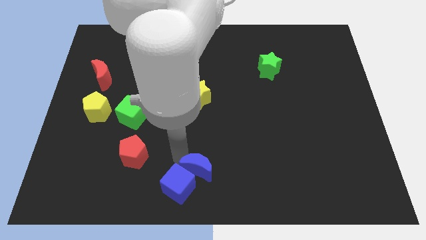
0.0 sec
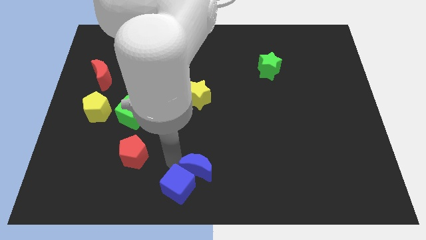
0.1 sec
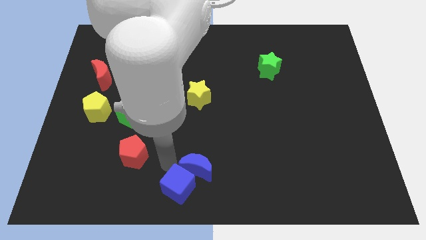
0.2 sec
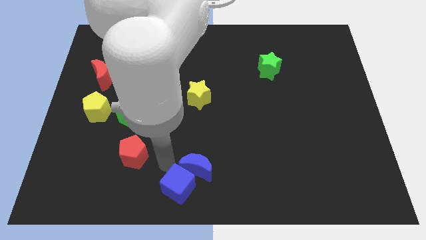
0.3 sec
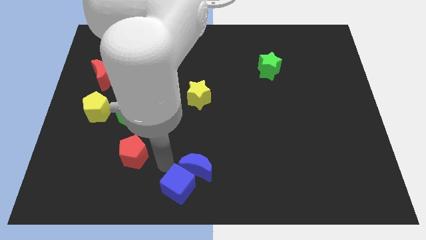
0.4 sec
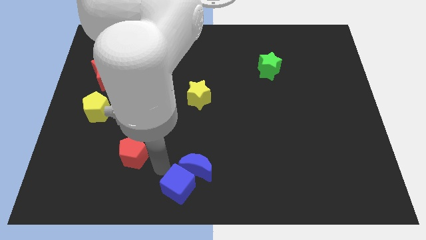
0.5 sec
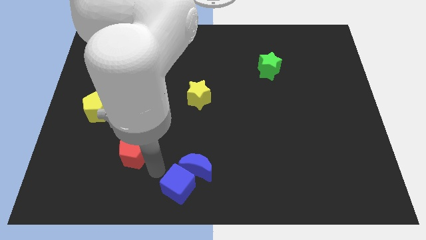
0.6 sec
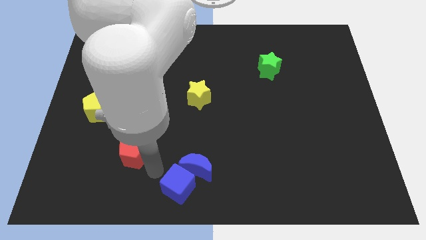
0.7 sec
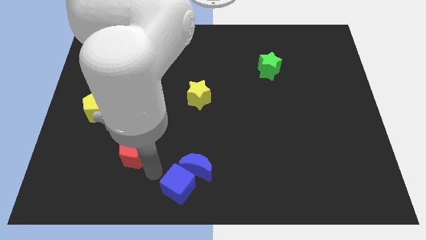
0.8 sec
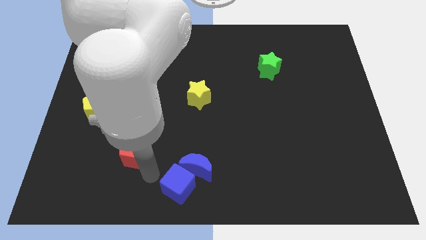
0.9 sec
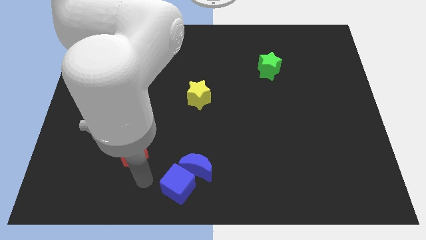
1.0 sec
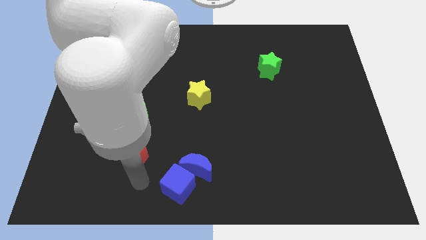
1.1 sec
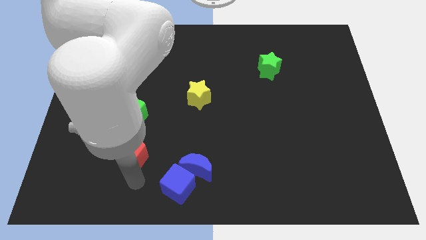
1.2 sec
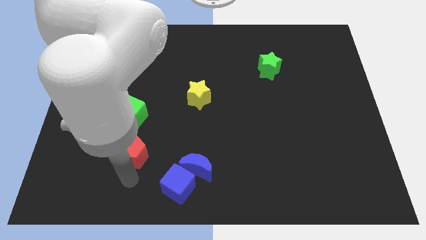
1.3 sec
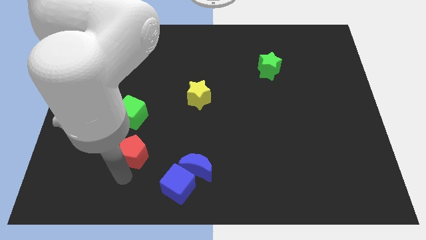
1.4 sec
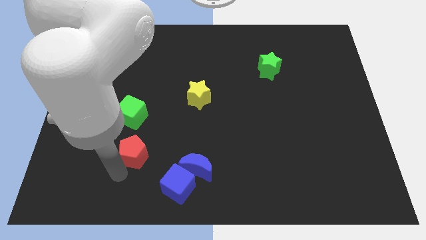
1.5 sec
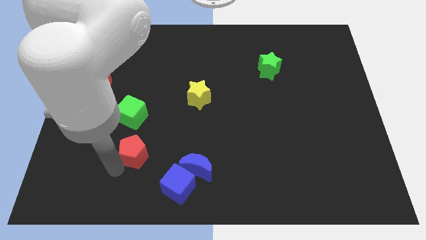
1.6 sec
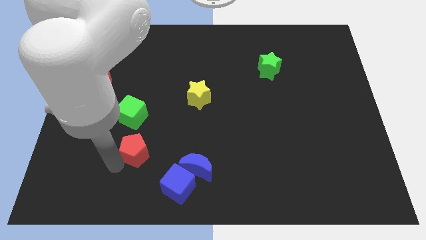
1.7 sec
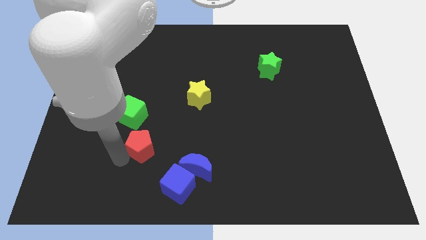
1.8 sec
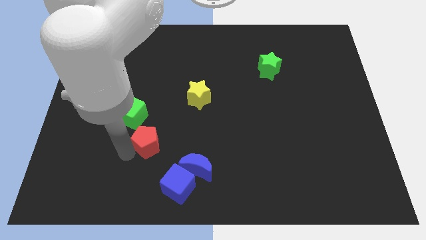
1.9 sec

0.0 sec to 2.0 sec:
move your arm away from the blue moon

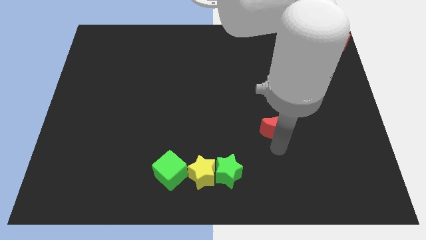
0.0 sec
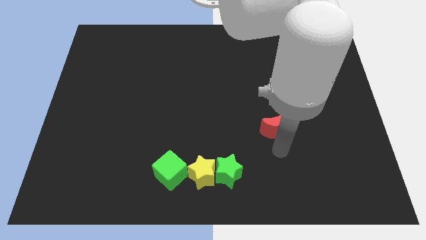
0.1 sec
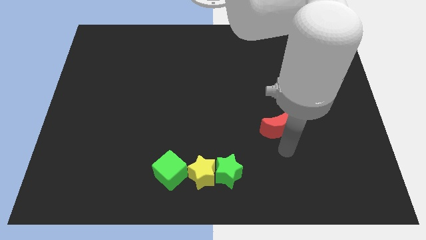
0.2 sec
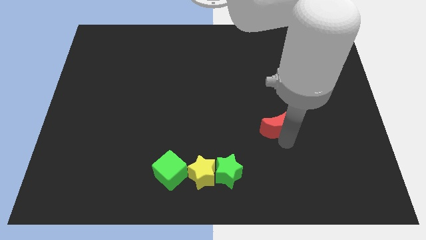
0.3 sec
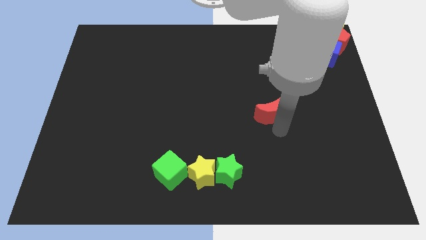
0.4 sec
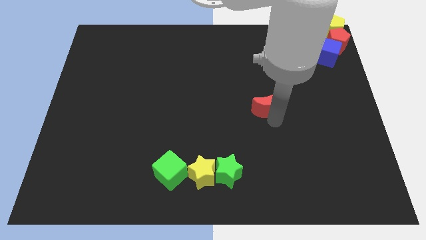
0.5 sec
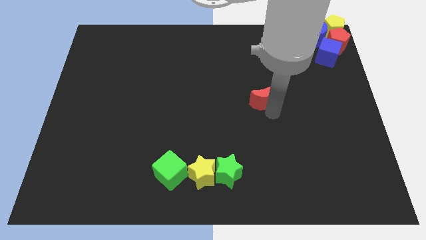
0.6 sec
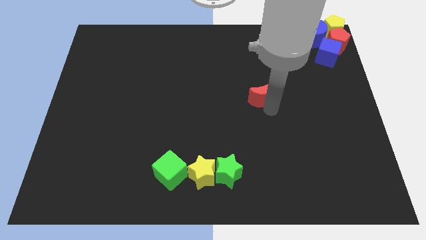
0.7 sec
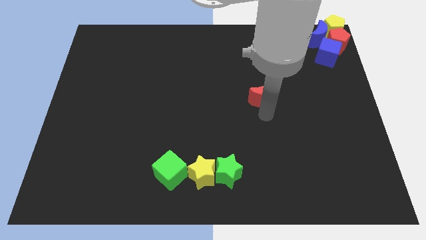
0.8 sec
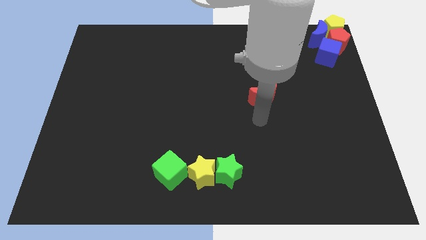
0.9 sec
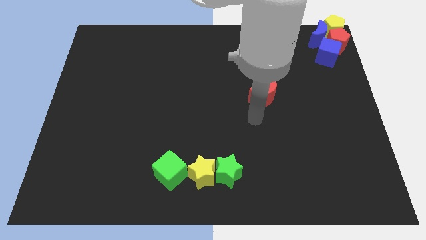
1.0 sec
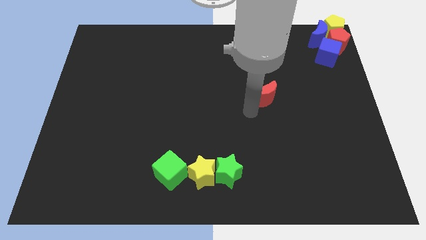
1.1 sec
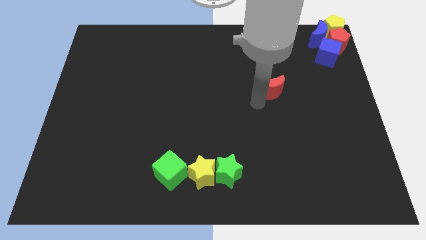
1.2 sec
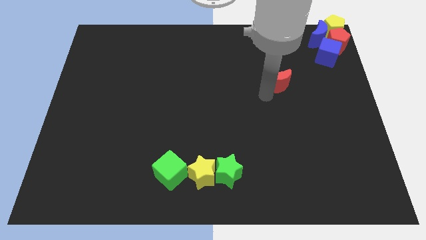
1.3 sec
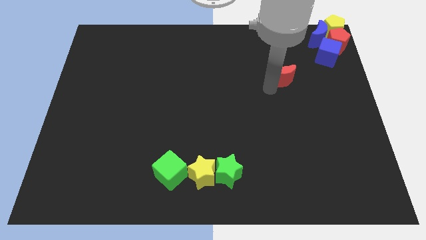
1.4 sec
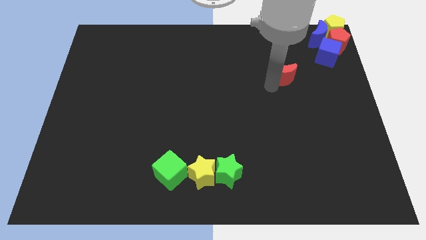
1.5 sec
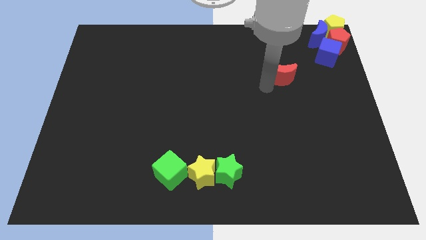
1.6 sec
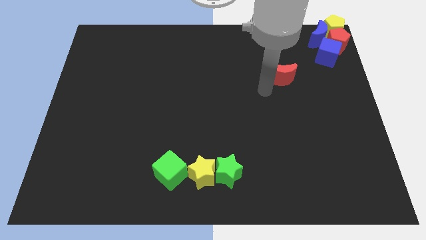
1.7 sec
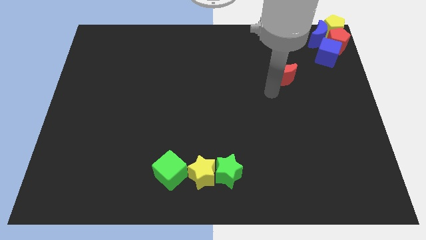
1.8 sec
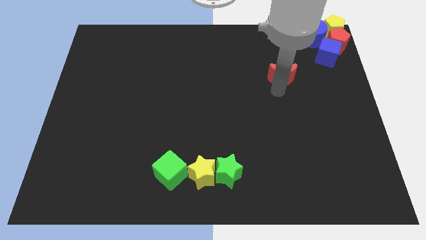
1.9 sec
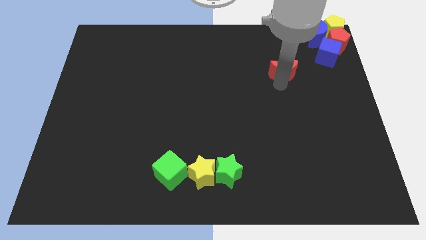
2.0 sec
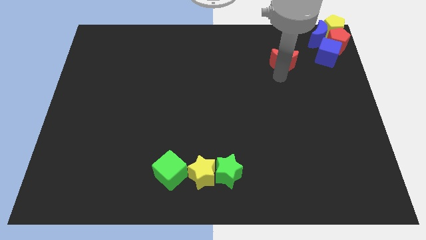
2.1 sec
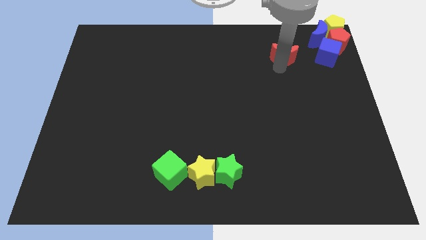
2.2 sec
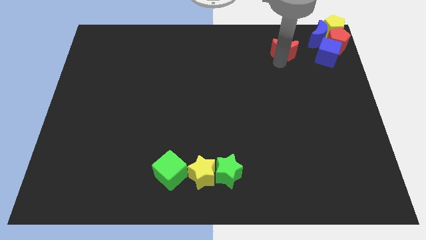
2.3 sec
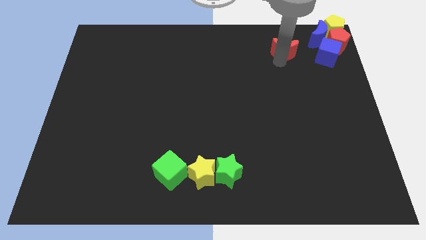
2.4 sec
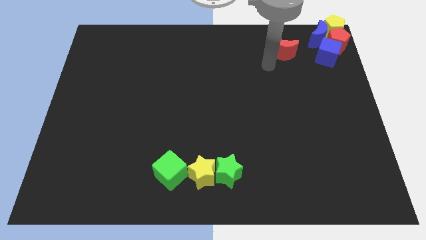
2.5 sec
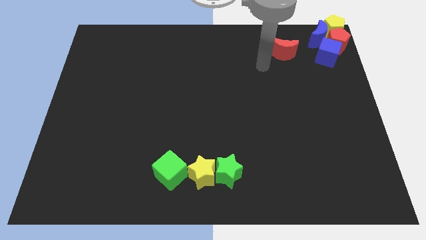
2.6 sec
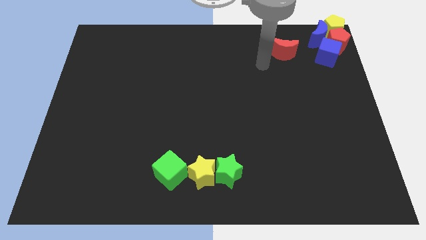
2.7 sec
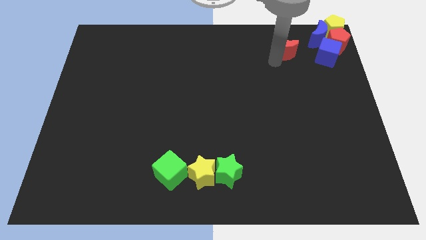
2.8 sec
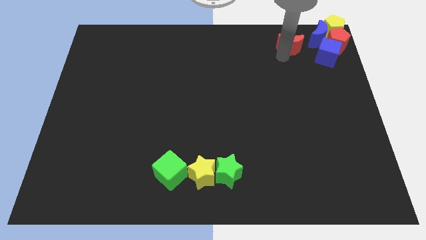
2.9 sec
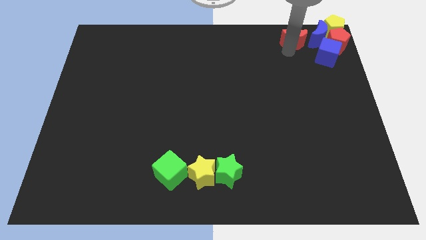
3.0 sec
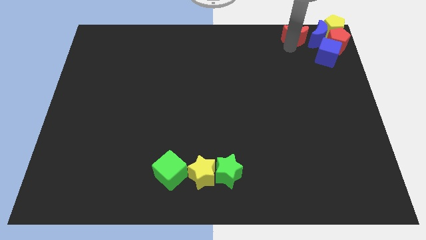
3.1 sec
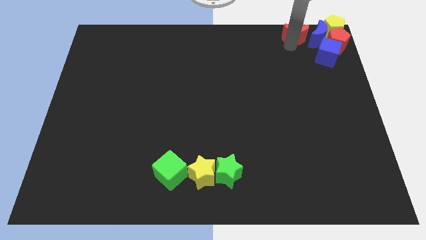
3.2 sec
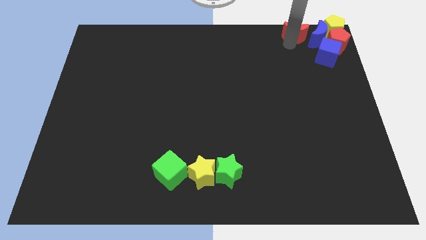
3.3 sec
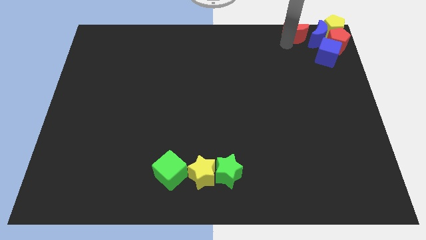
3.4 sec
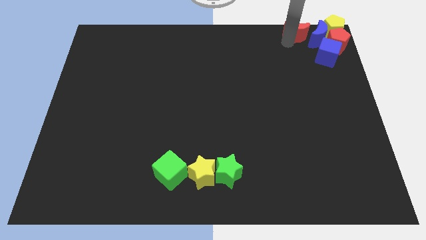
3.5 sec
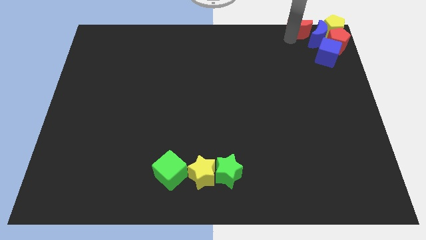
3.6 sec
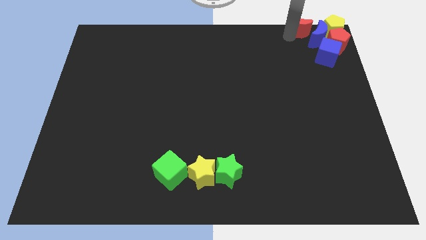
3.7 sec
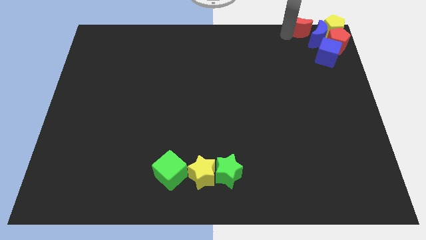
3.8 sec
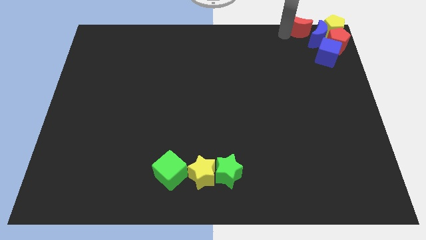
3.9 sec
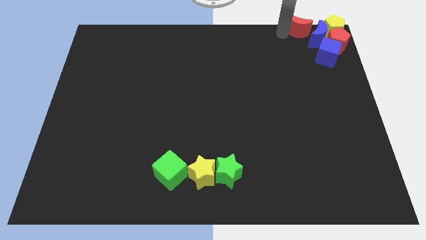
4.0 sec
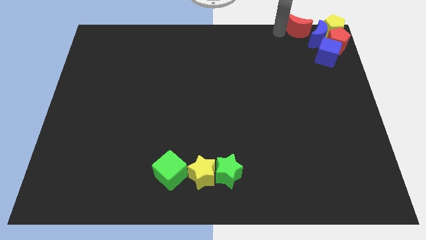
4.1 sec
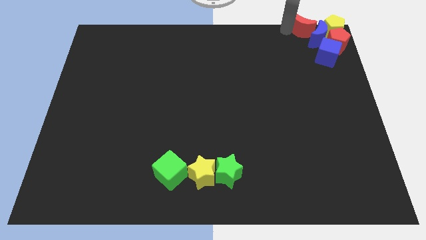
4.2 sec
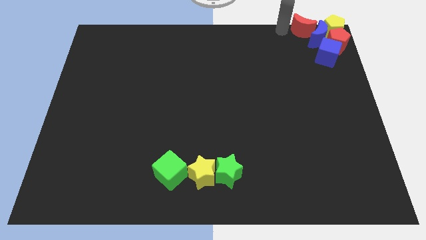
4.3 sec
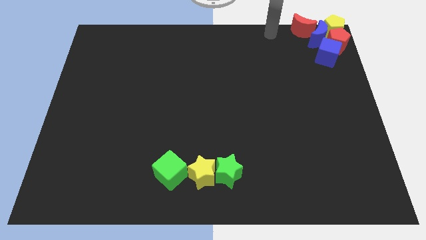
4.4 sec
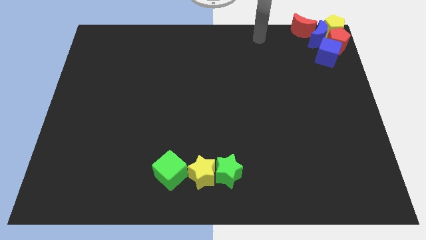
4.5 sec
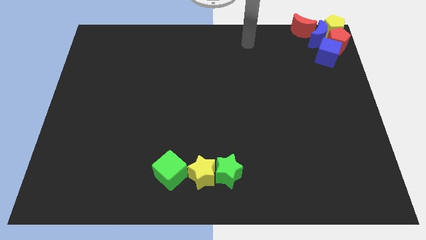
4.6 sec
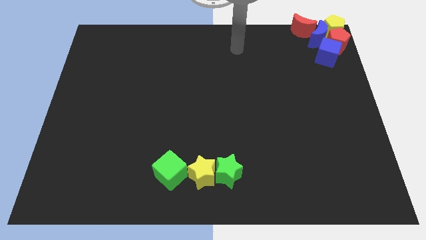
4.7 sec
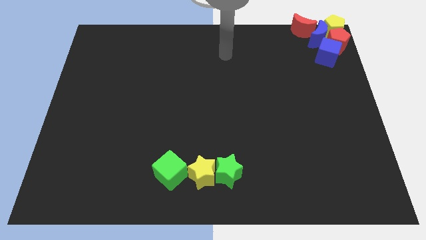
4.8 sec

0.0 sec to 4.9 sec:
place the red moon left to the blue moon

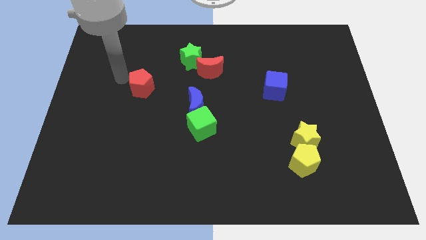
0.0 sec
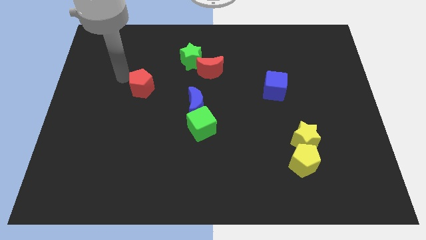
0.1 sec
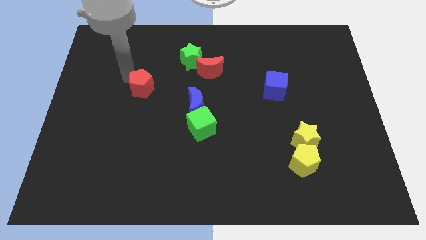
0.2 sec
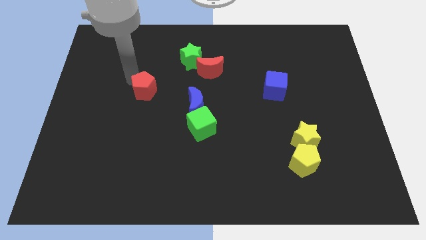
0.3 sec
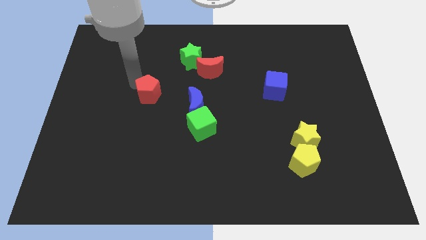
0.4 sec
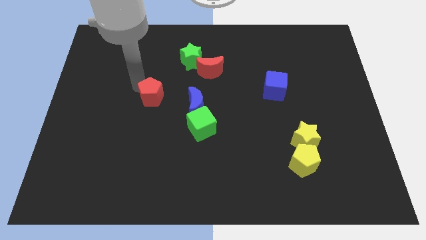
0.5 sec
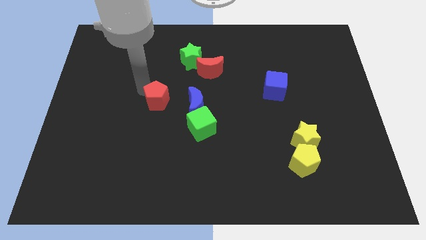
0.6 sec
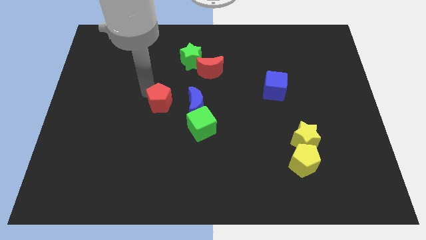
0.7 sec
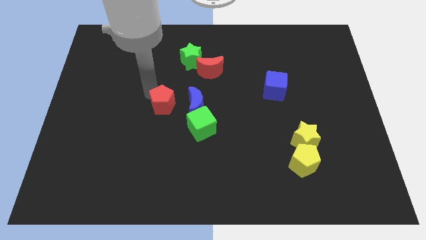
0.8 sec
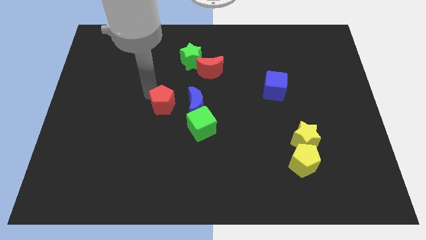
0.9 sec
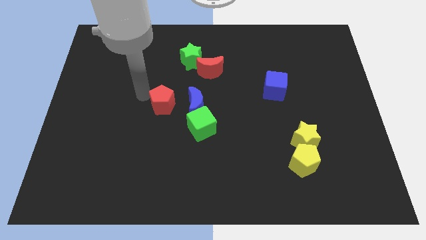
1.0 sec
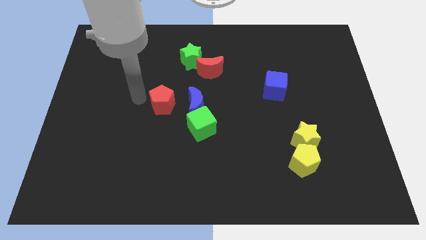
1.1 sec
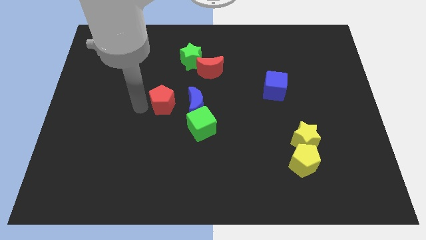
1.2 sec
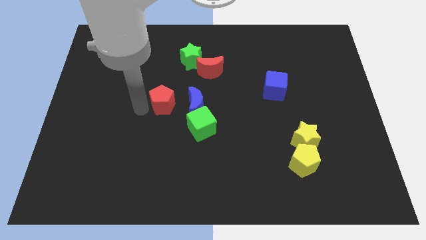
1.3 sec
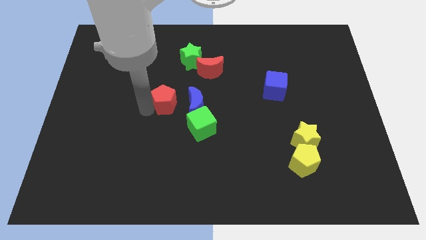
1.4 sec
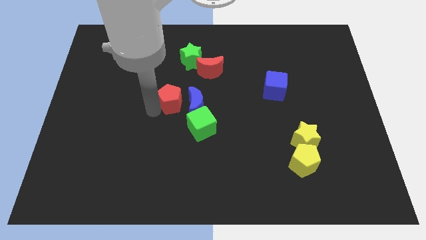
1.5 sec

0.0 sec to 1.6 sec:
place red pentagon parallel to blue moon

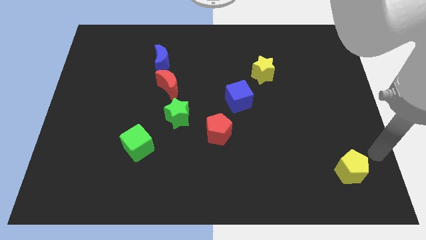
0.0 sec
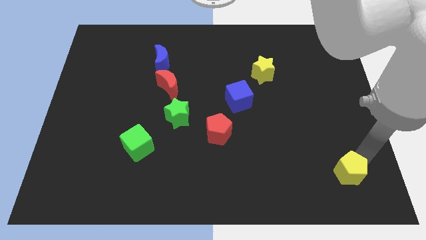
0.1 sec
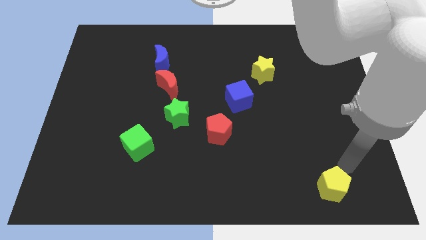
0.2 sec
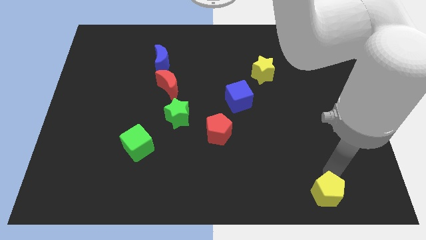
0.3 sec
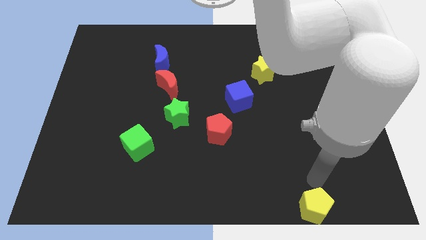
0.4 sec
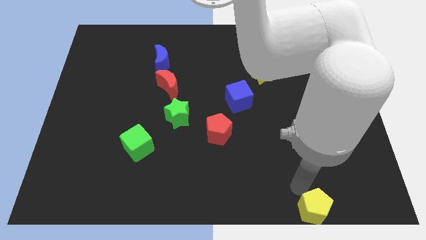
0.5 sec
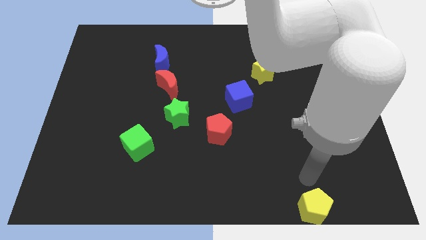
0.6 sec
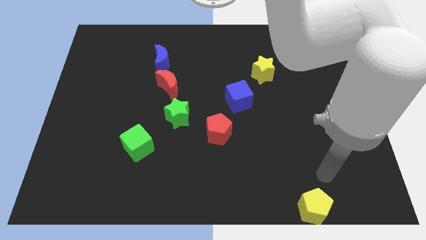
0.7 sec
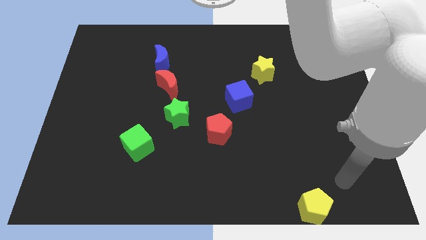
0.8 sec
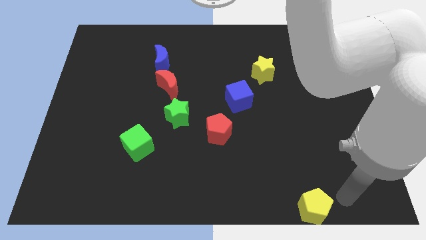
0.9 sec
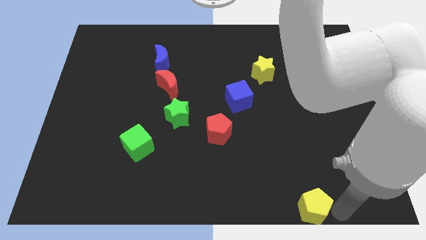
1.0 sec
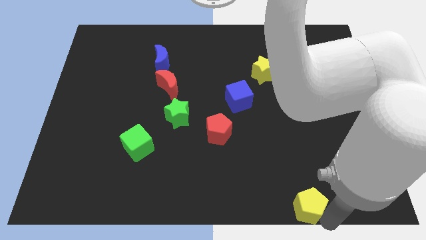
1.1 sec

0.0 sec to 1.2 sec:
push the yellow pentagon slightly bottom left
